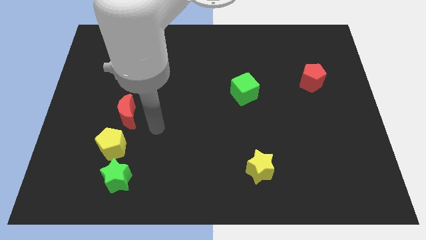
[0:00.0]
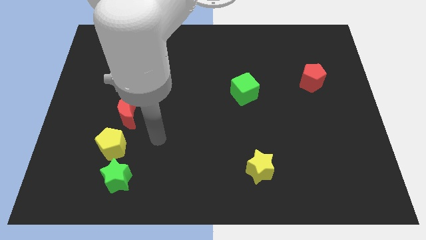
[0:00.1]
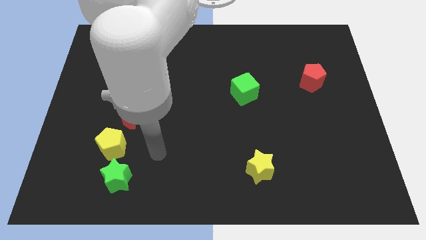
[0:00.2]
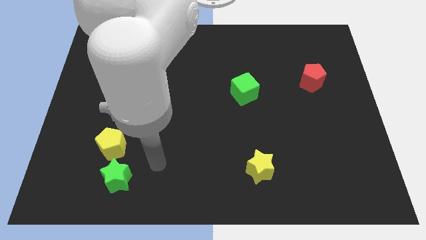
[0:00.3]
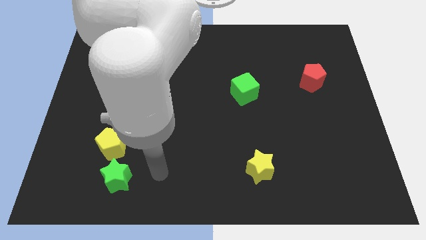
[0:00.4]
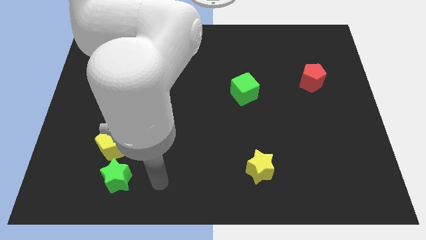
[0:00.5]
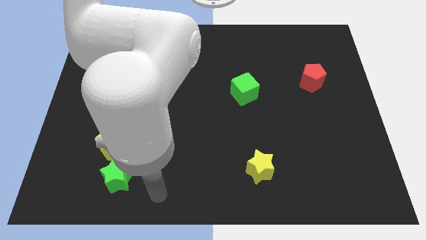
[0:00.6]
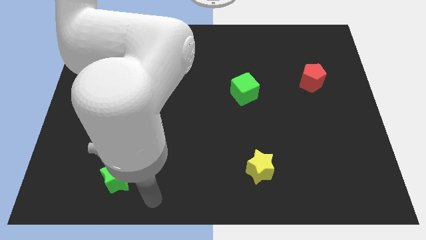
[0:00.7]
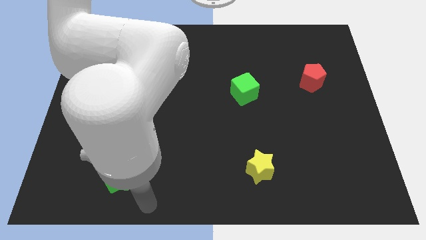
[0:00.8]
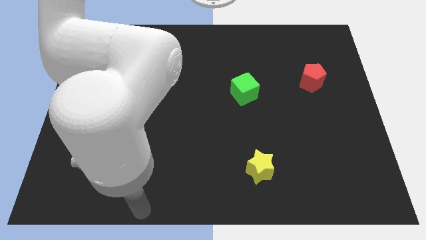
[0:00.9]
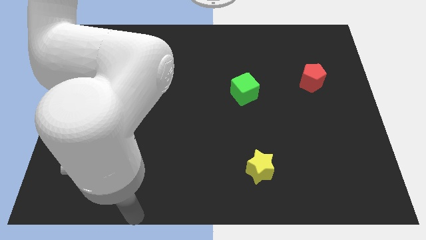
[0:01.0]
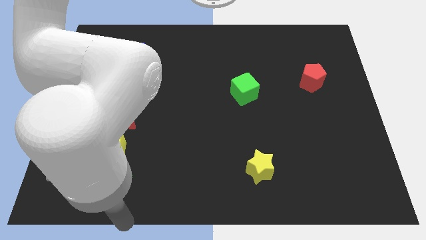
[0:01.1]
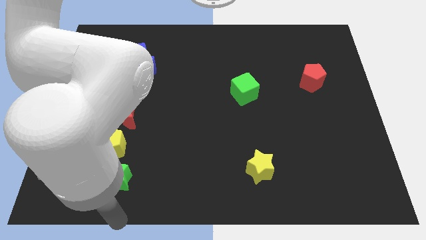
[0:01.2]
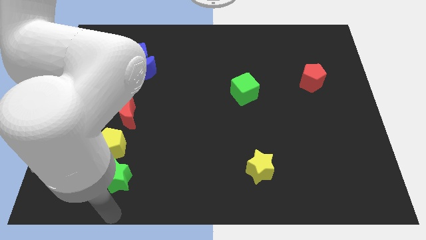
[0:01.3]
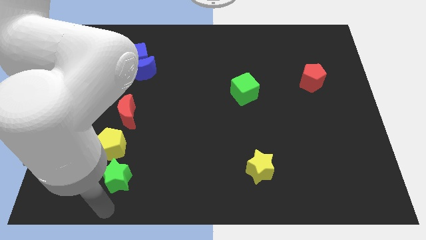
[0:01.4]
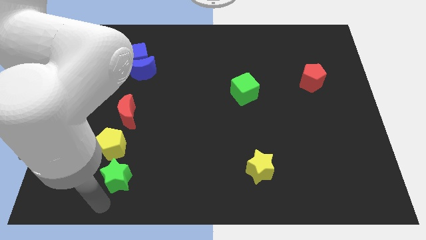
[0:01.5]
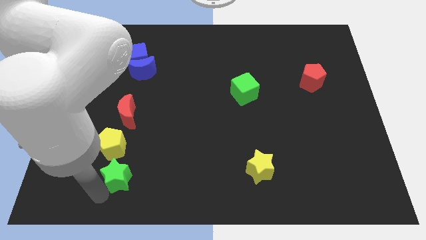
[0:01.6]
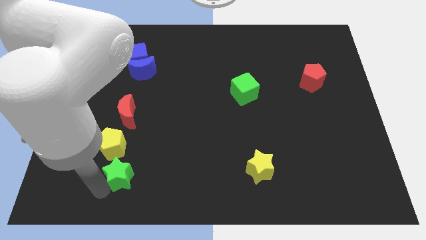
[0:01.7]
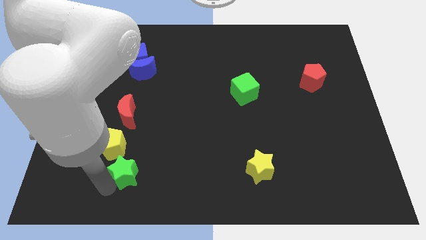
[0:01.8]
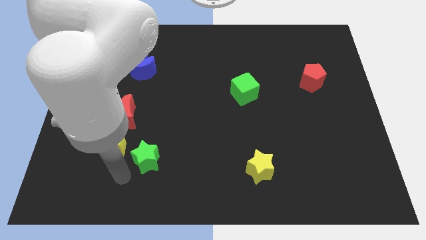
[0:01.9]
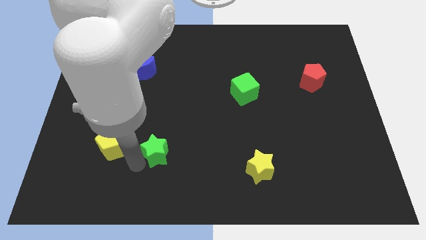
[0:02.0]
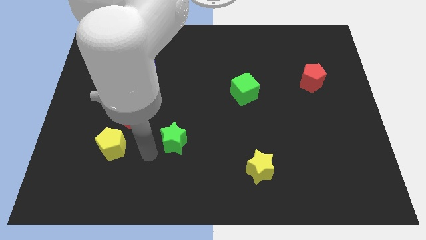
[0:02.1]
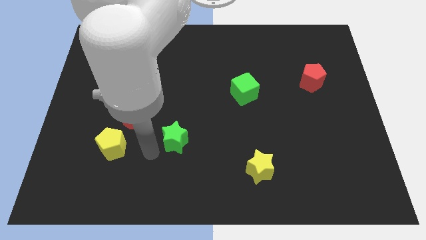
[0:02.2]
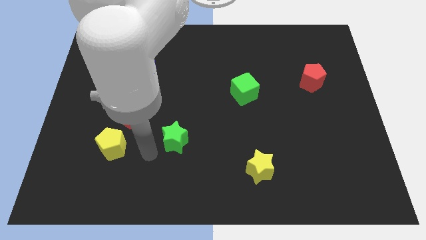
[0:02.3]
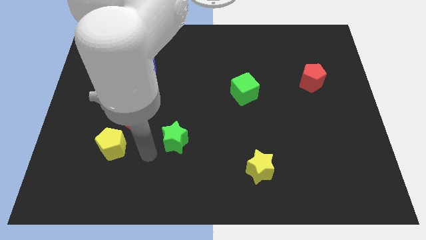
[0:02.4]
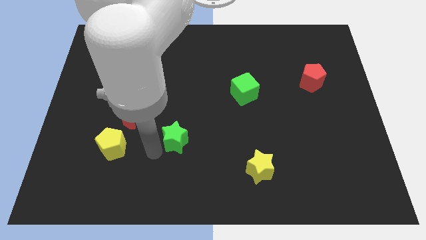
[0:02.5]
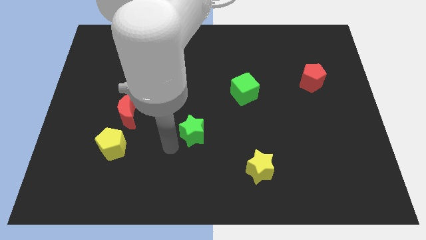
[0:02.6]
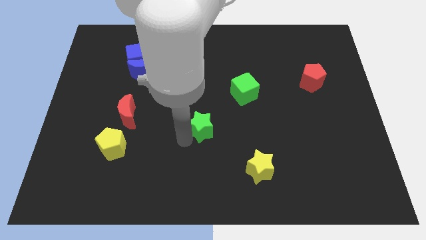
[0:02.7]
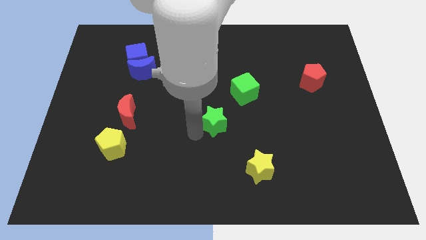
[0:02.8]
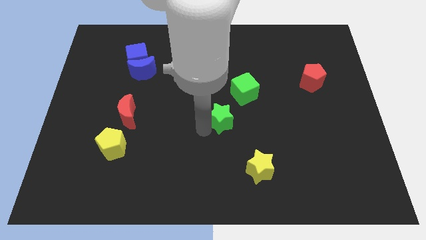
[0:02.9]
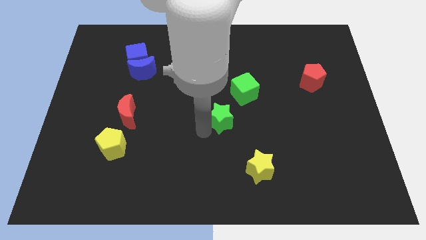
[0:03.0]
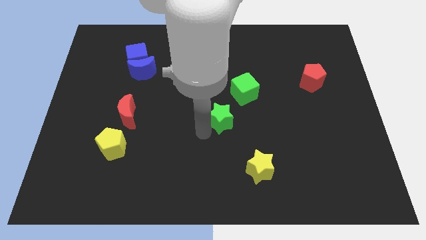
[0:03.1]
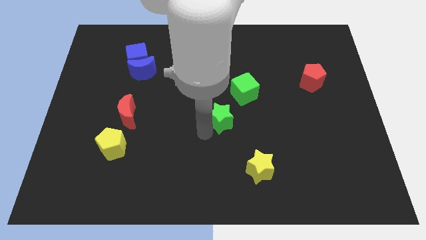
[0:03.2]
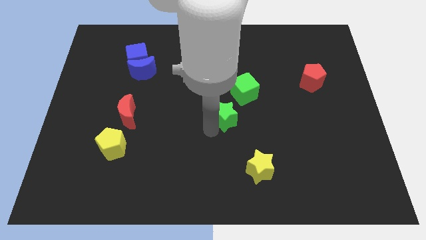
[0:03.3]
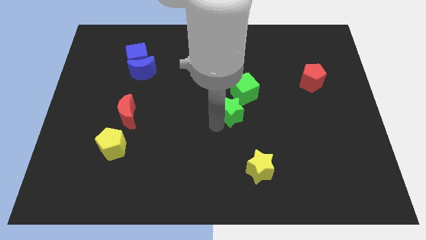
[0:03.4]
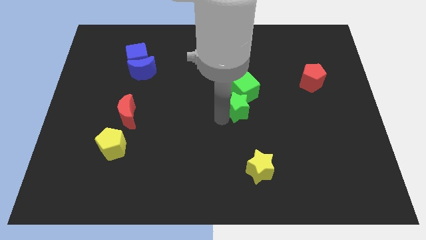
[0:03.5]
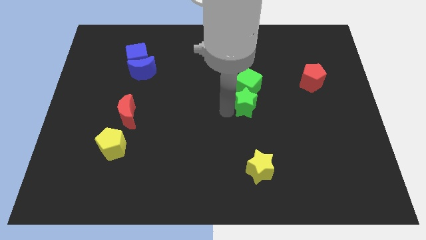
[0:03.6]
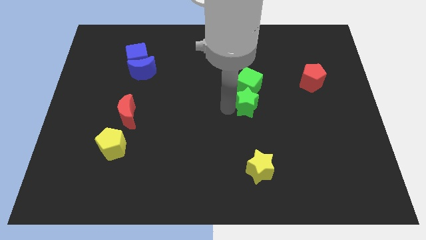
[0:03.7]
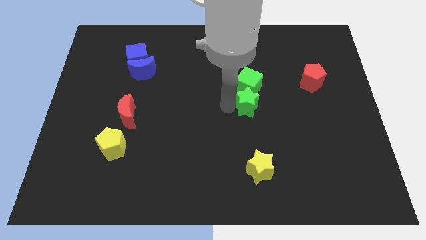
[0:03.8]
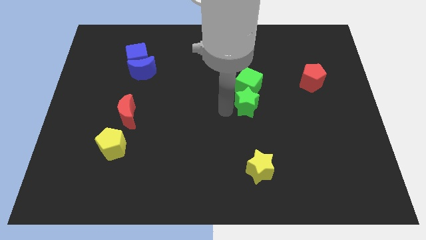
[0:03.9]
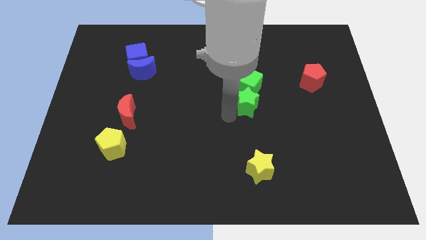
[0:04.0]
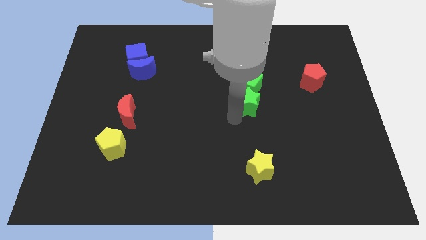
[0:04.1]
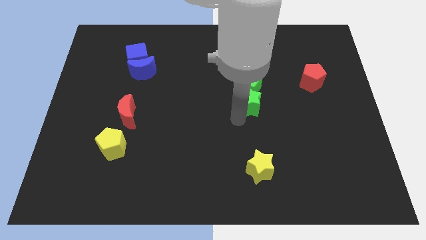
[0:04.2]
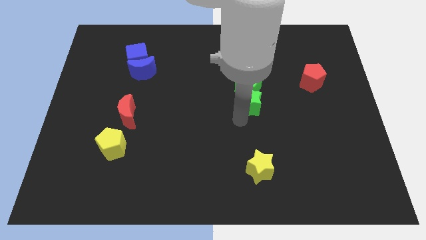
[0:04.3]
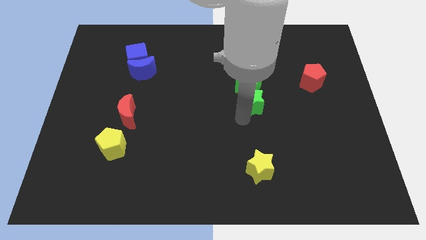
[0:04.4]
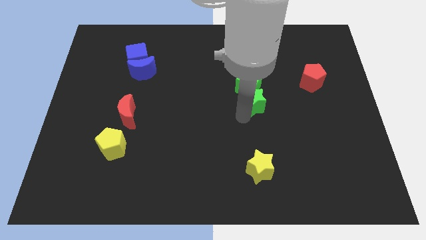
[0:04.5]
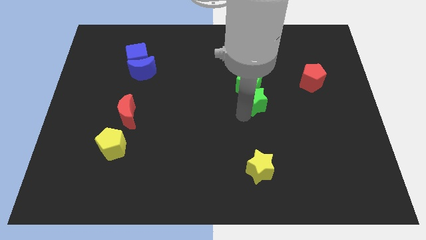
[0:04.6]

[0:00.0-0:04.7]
push the green star into the green cube

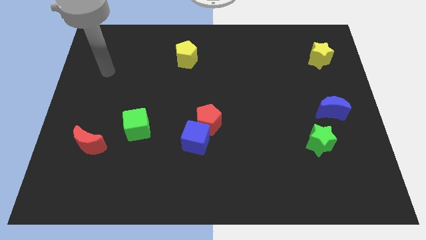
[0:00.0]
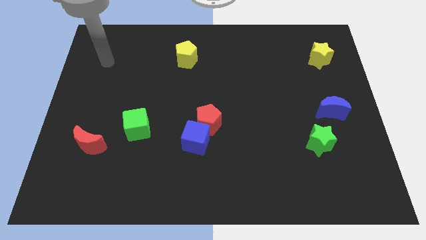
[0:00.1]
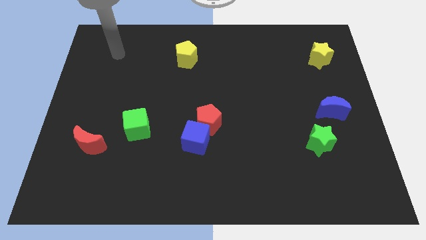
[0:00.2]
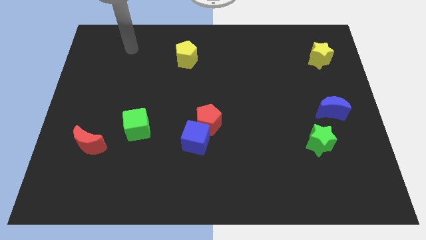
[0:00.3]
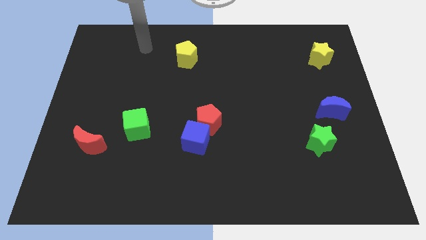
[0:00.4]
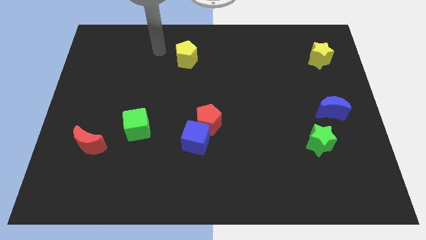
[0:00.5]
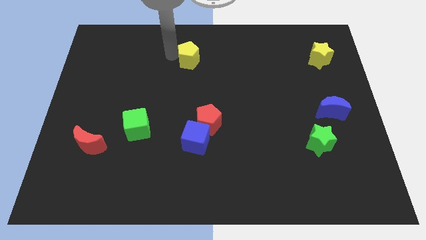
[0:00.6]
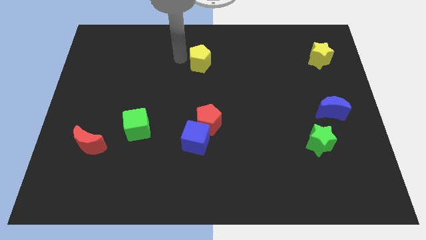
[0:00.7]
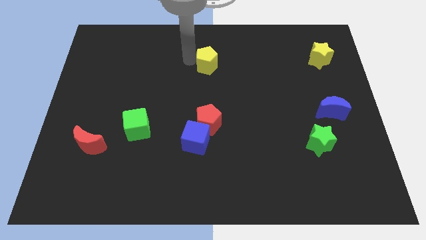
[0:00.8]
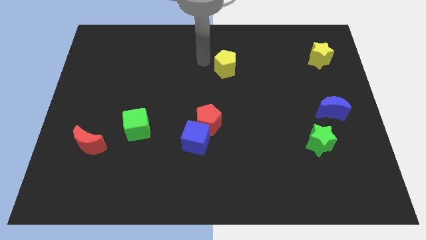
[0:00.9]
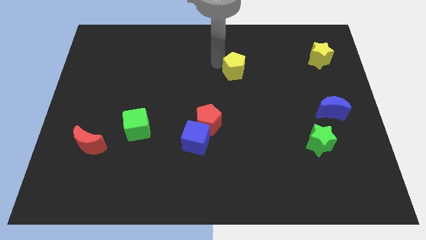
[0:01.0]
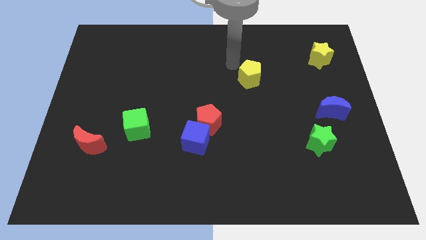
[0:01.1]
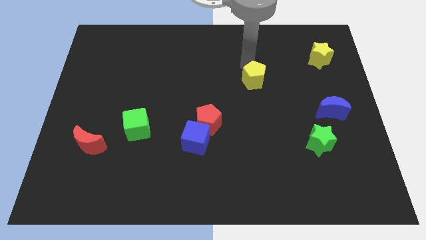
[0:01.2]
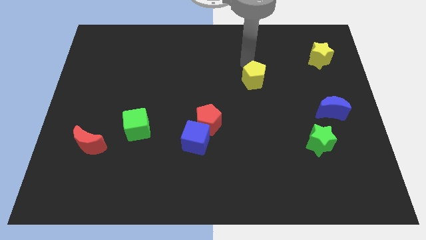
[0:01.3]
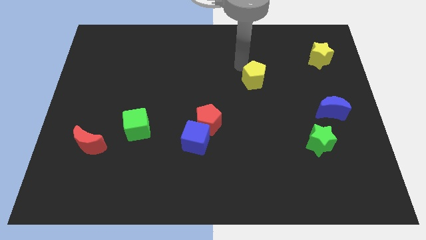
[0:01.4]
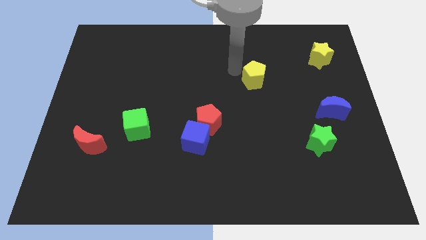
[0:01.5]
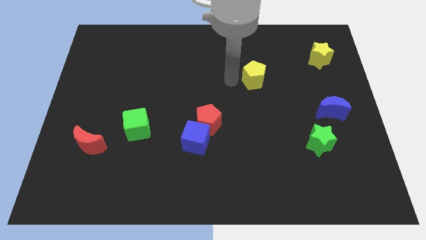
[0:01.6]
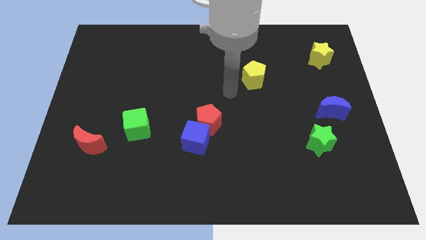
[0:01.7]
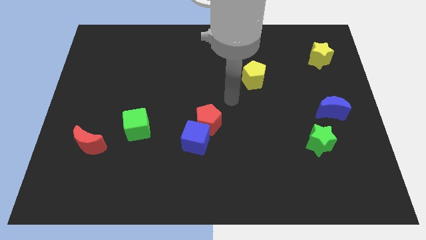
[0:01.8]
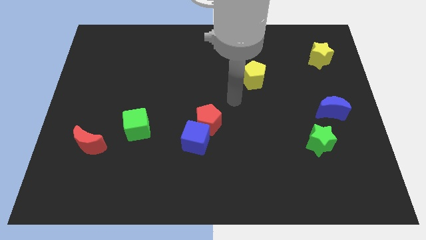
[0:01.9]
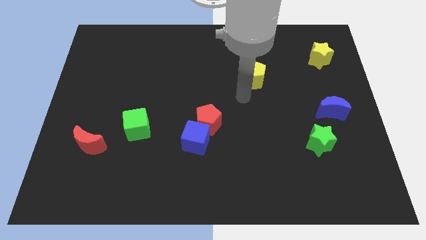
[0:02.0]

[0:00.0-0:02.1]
move the yellow pentagon towards the right side

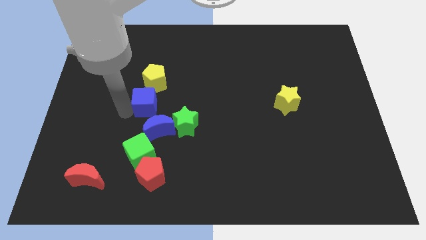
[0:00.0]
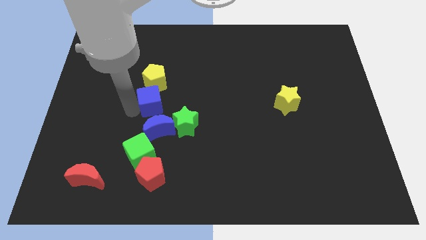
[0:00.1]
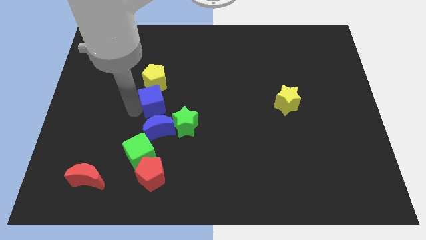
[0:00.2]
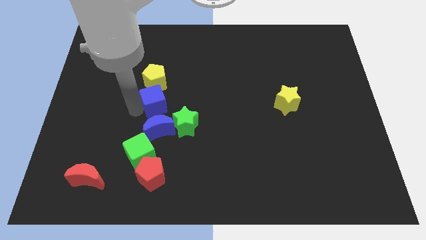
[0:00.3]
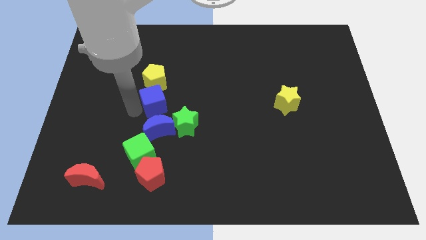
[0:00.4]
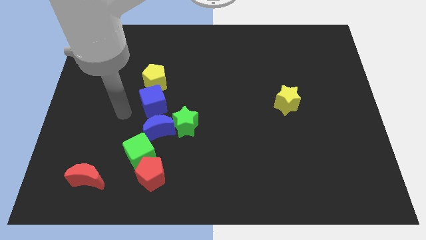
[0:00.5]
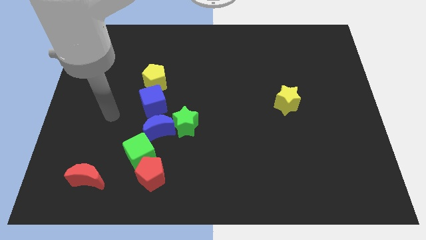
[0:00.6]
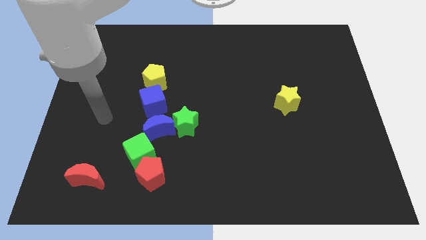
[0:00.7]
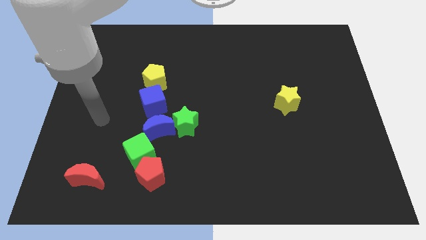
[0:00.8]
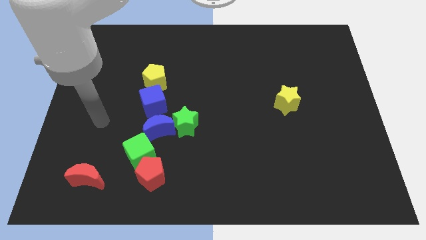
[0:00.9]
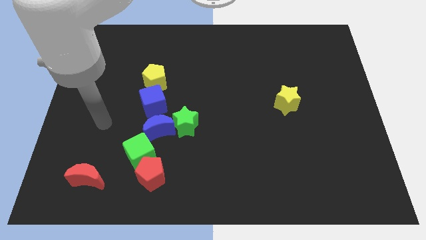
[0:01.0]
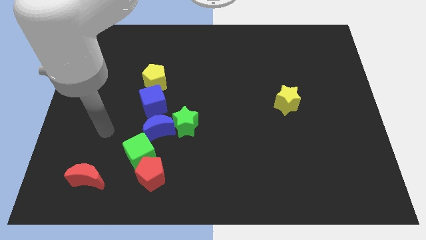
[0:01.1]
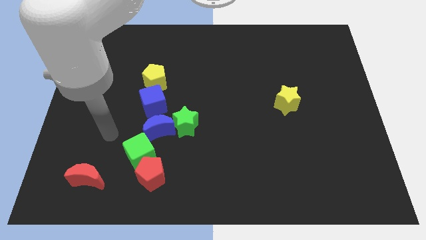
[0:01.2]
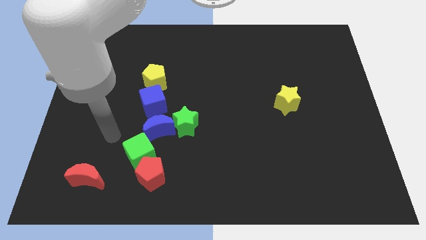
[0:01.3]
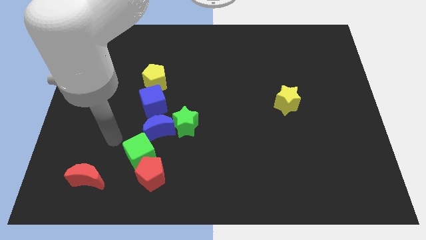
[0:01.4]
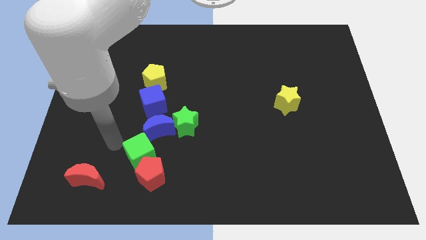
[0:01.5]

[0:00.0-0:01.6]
move blue cube slightly right

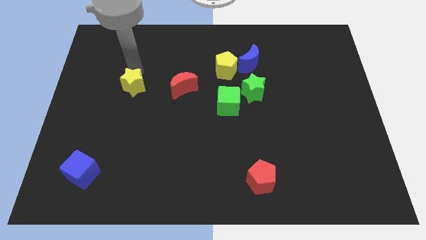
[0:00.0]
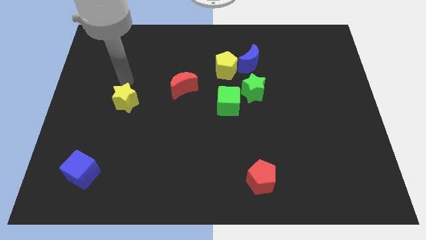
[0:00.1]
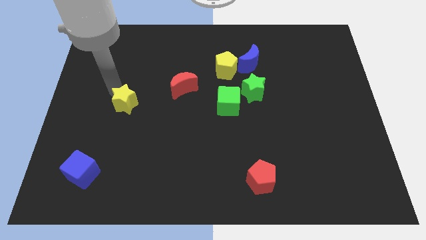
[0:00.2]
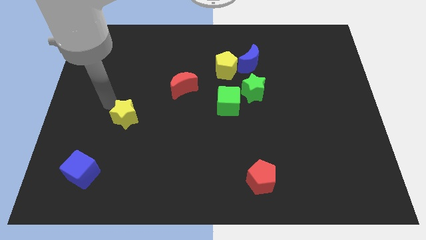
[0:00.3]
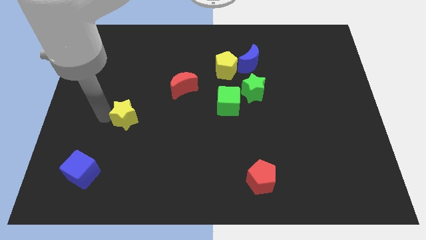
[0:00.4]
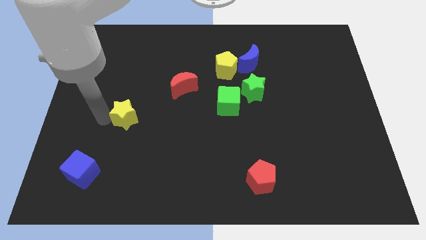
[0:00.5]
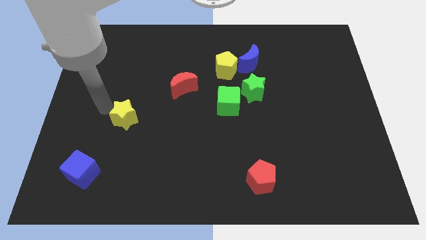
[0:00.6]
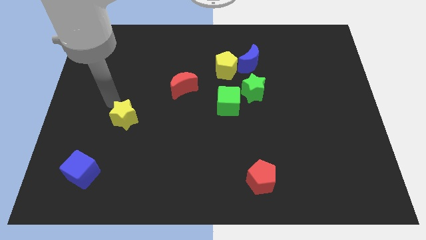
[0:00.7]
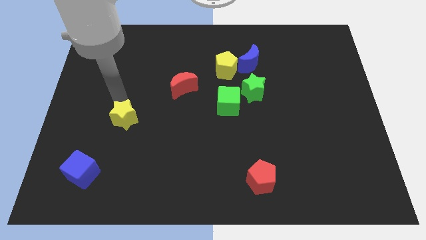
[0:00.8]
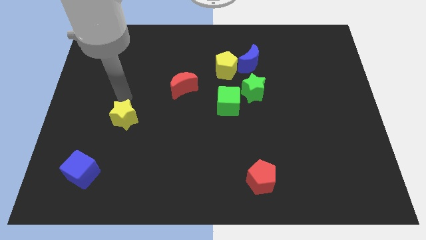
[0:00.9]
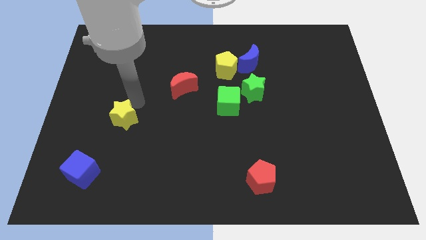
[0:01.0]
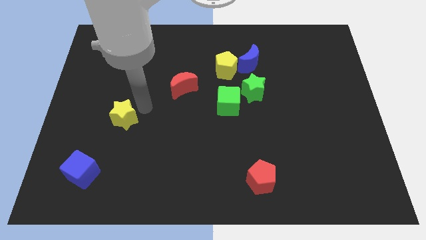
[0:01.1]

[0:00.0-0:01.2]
push yellow star in between red crescent and blue cube
